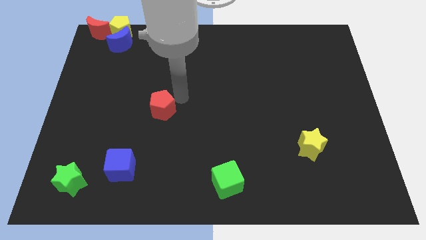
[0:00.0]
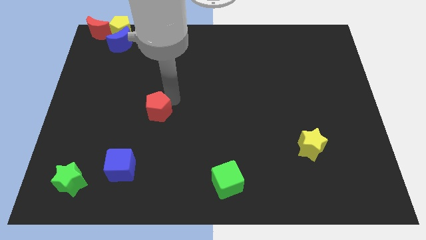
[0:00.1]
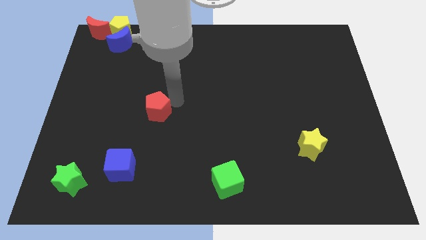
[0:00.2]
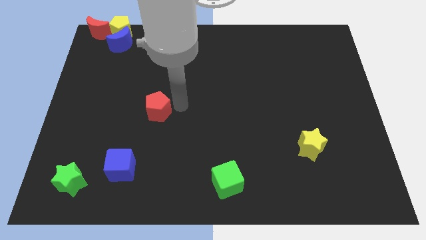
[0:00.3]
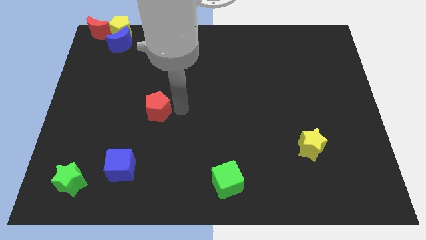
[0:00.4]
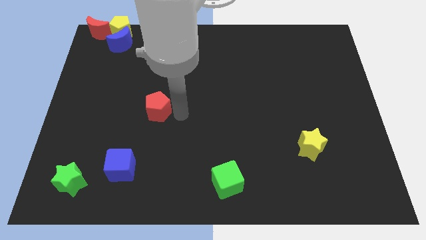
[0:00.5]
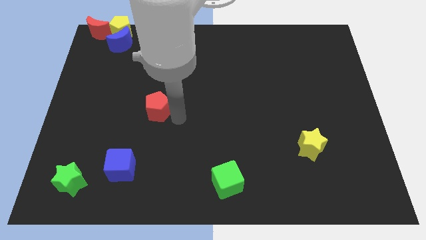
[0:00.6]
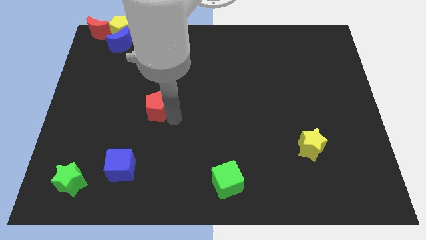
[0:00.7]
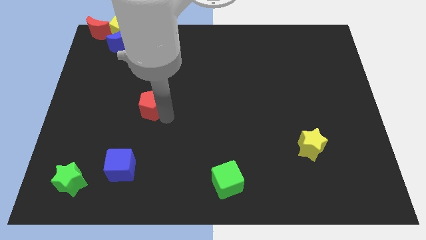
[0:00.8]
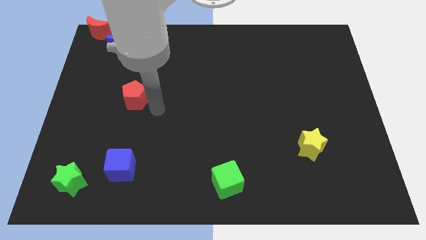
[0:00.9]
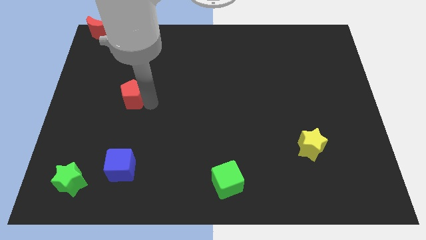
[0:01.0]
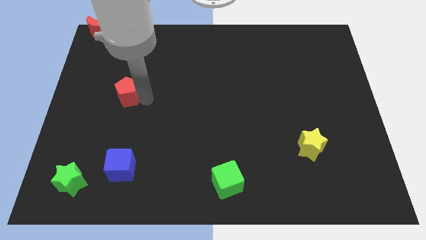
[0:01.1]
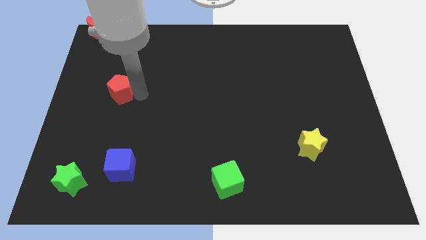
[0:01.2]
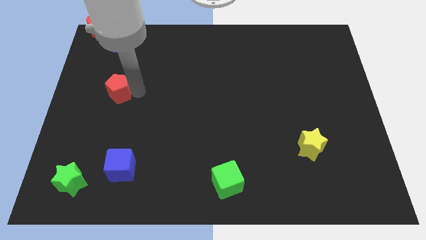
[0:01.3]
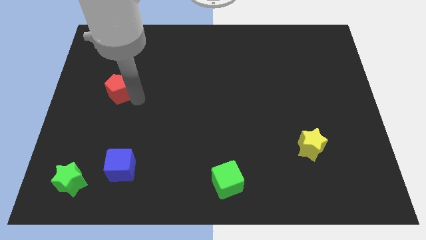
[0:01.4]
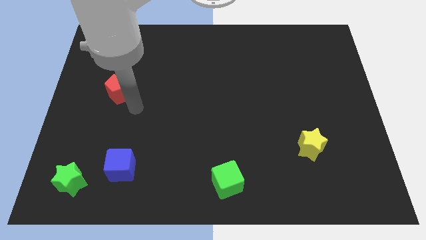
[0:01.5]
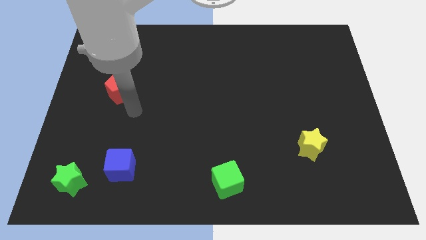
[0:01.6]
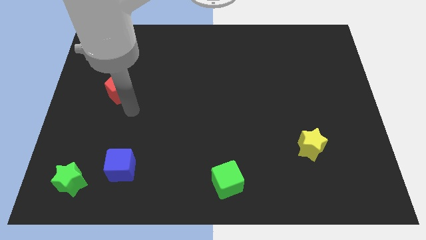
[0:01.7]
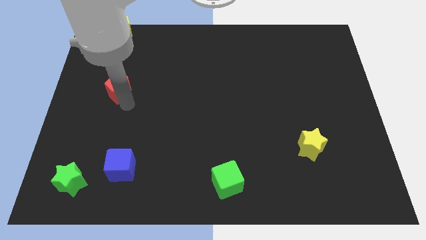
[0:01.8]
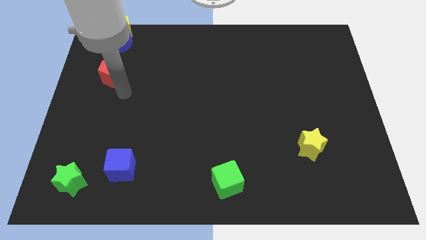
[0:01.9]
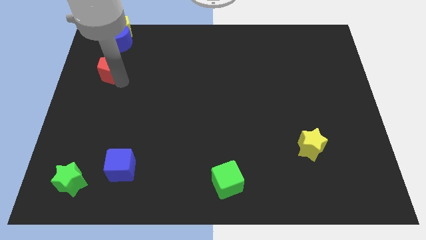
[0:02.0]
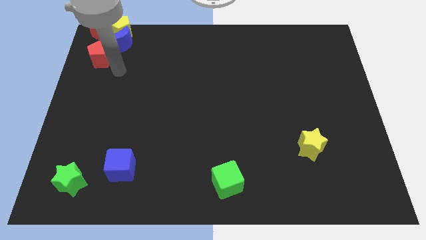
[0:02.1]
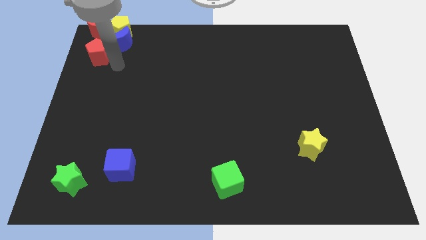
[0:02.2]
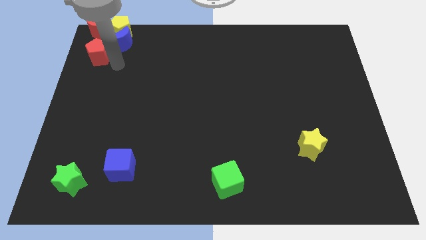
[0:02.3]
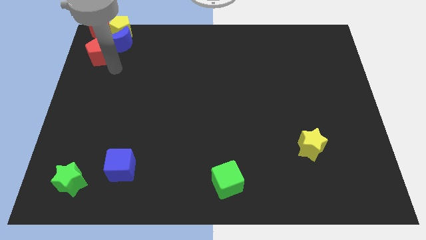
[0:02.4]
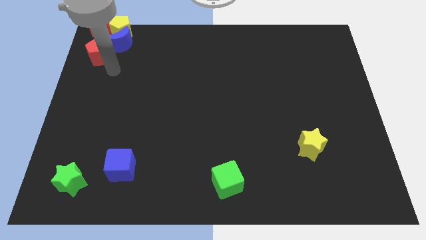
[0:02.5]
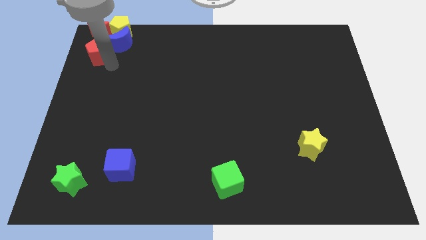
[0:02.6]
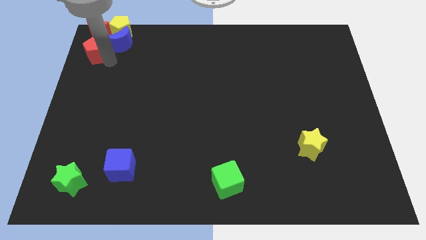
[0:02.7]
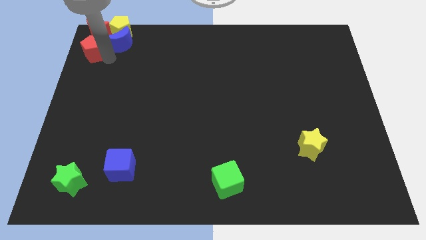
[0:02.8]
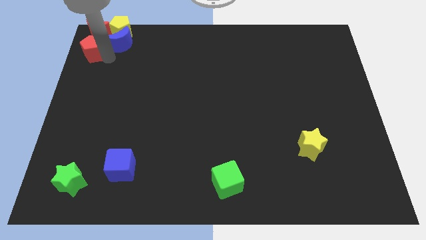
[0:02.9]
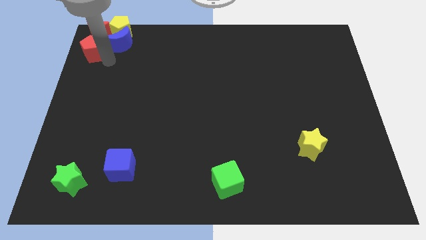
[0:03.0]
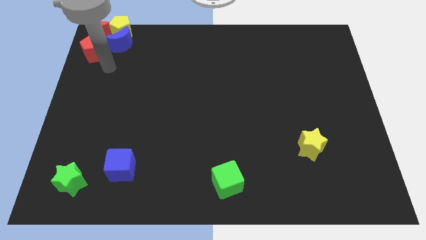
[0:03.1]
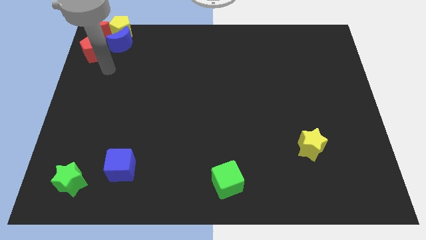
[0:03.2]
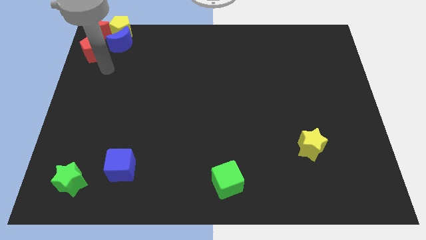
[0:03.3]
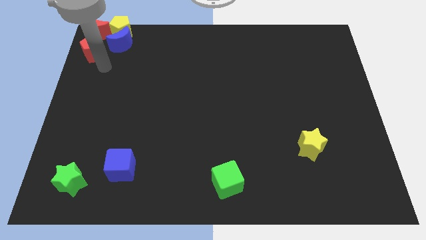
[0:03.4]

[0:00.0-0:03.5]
put the red pentagon to the bottom side of the red crescent

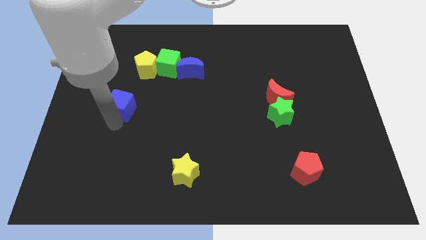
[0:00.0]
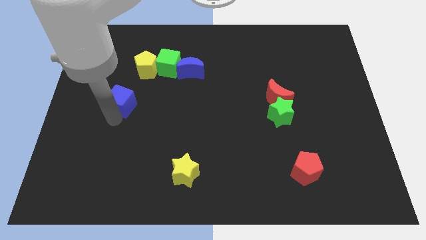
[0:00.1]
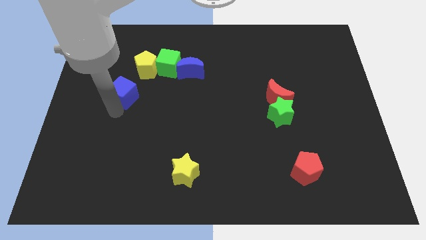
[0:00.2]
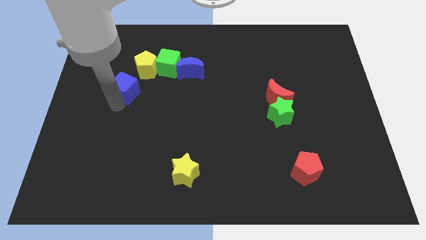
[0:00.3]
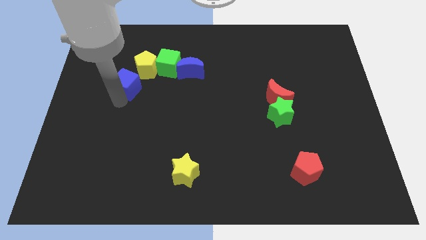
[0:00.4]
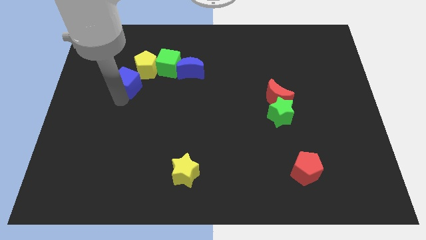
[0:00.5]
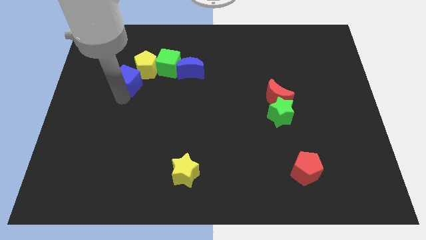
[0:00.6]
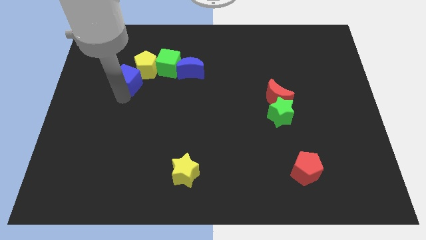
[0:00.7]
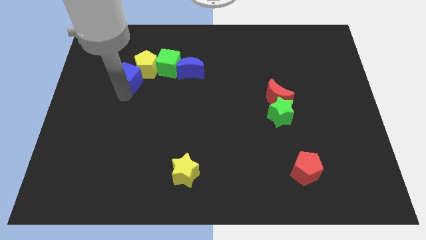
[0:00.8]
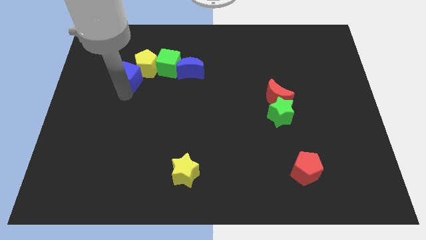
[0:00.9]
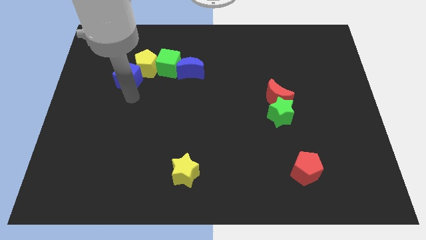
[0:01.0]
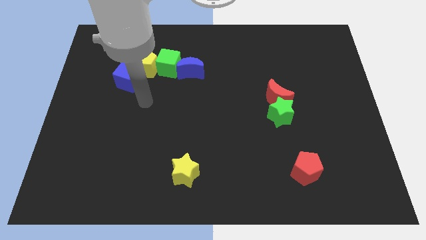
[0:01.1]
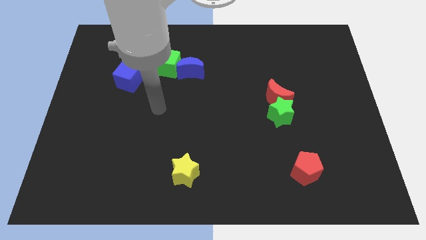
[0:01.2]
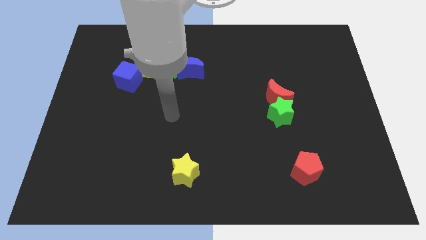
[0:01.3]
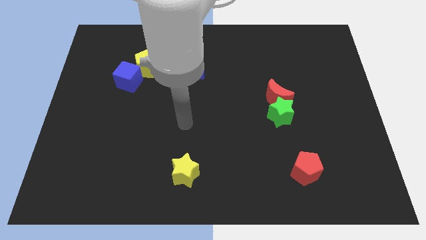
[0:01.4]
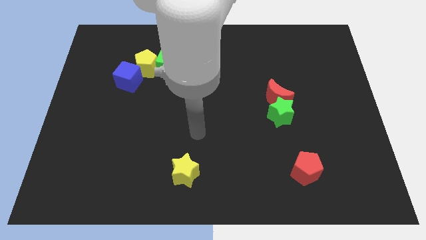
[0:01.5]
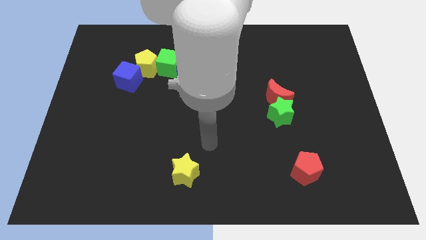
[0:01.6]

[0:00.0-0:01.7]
place the blue cube below the yellow pentagon

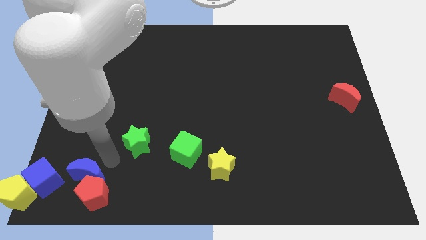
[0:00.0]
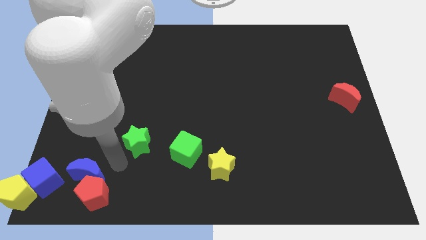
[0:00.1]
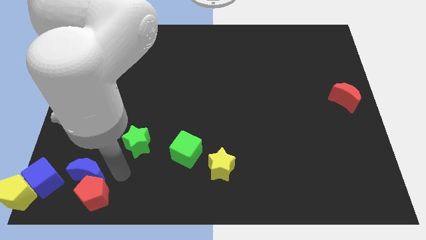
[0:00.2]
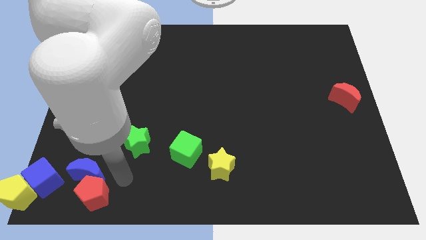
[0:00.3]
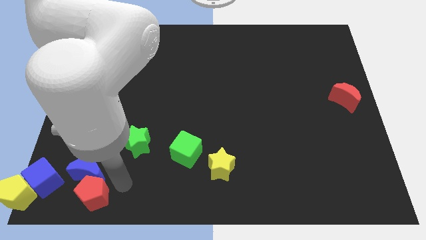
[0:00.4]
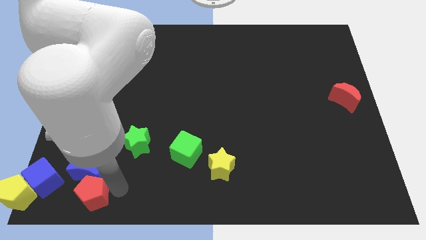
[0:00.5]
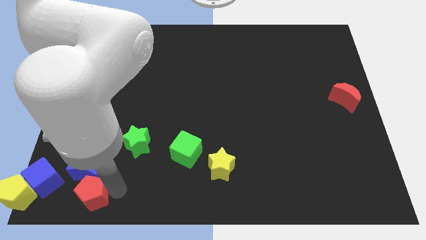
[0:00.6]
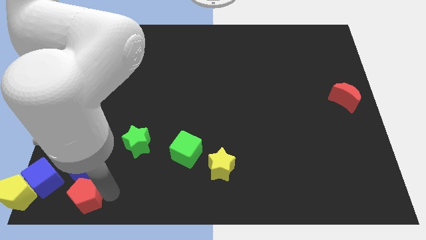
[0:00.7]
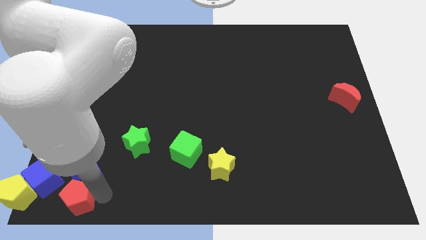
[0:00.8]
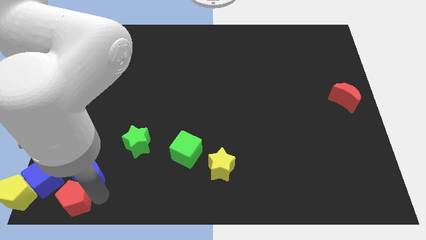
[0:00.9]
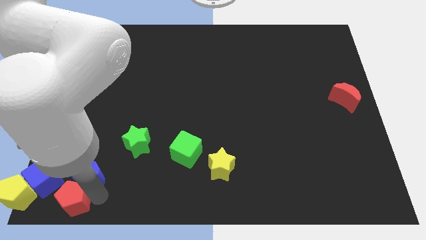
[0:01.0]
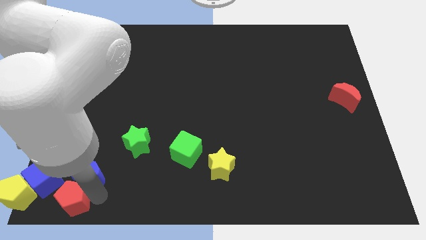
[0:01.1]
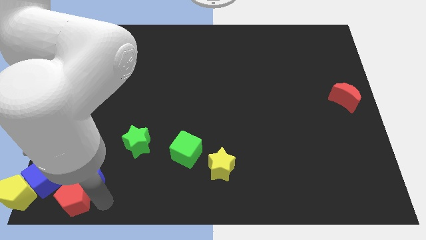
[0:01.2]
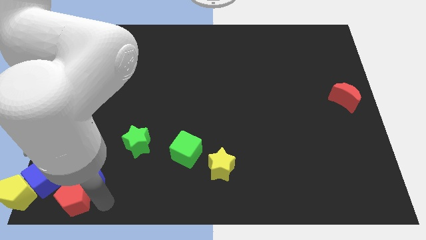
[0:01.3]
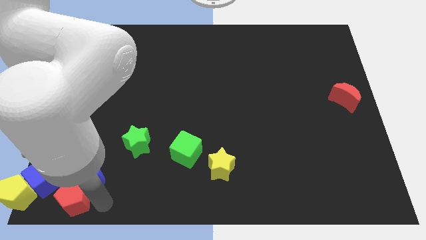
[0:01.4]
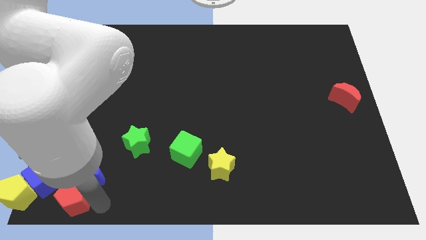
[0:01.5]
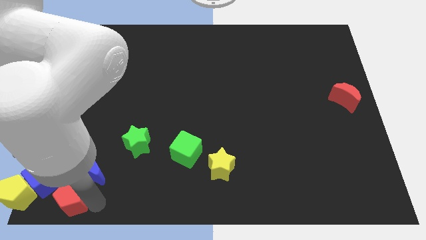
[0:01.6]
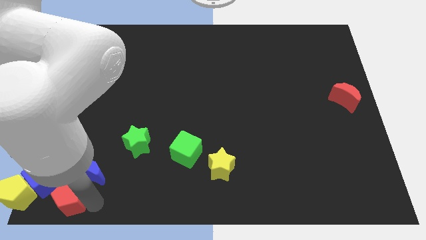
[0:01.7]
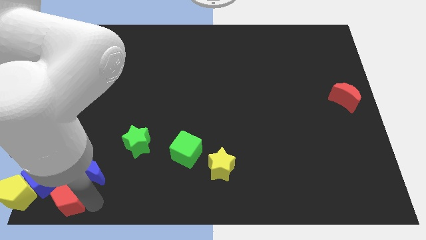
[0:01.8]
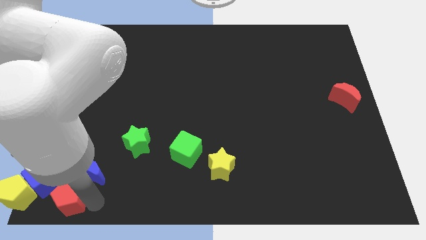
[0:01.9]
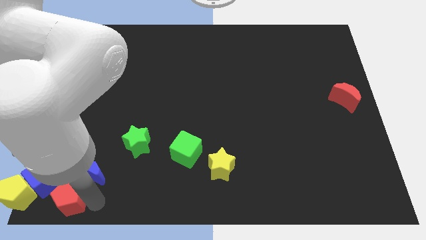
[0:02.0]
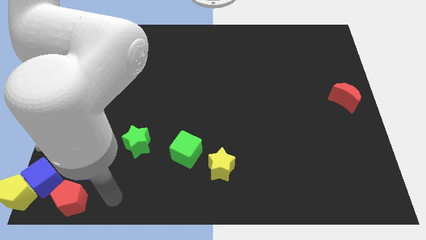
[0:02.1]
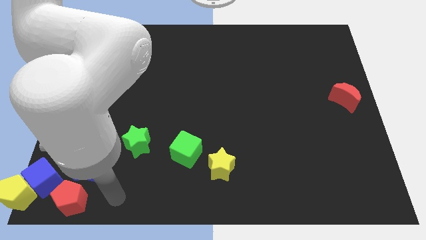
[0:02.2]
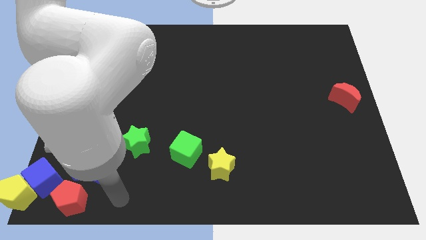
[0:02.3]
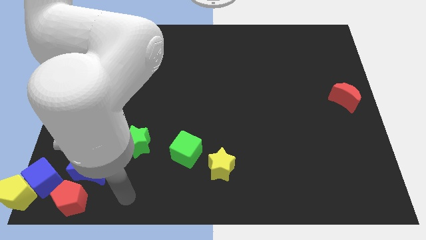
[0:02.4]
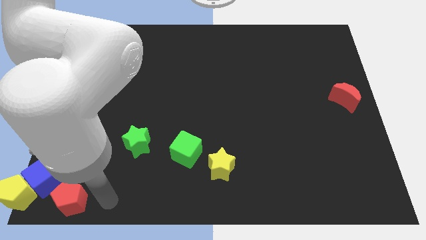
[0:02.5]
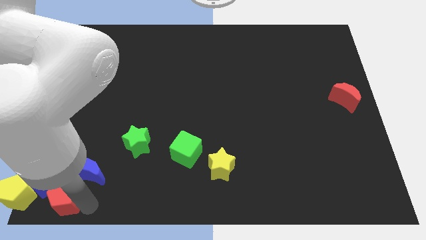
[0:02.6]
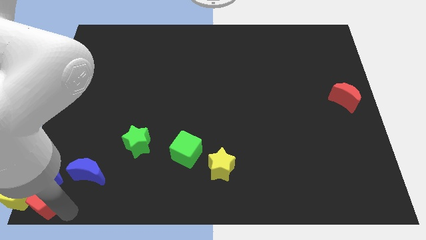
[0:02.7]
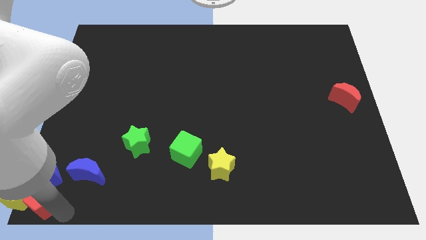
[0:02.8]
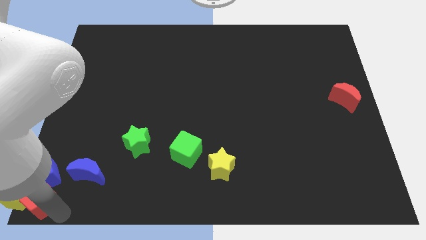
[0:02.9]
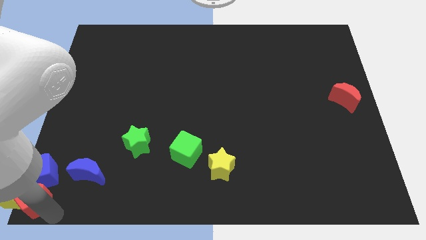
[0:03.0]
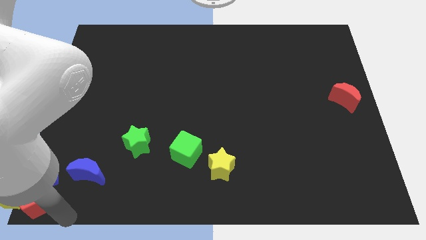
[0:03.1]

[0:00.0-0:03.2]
separate red pentagon from blue moon

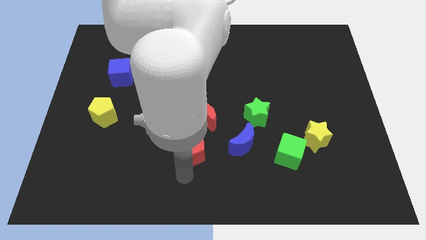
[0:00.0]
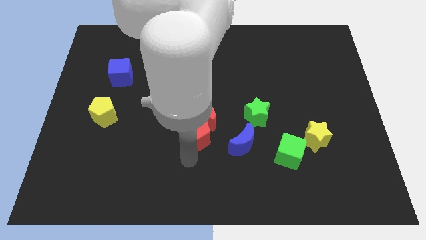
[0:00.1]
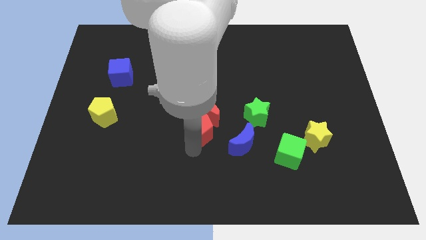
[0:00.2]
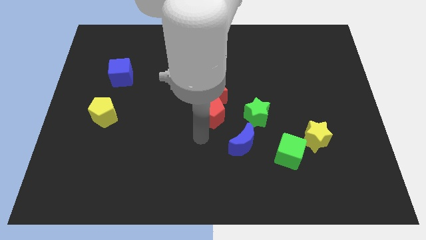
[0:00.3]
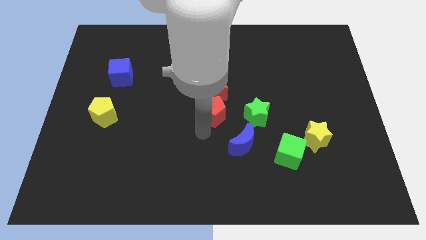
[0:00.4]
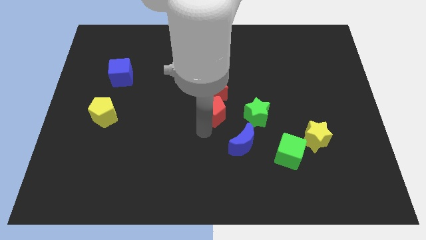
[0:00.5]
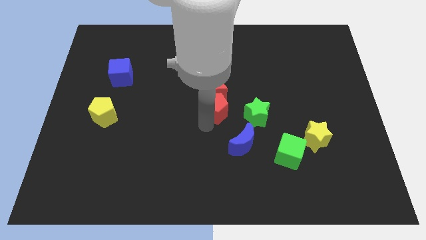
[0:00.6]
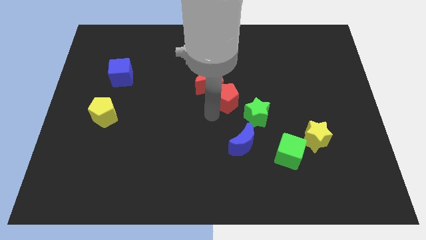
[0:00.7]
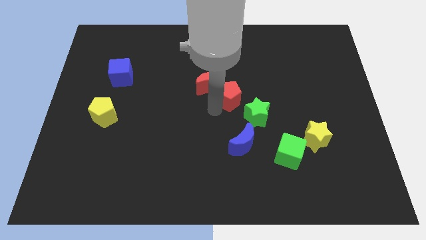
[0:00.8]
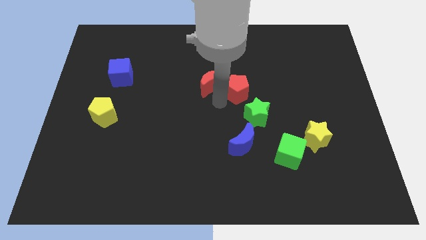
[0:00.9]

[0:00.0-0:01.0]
move red pentagon along with red crescent slightly towards the top of the board
